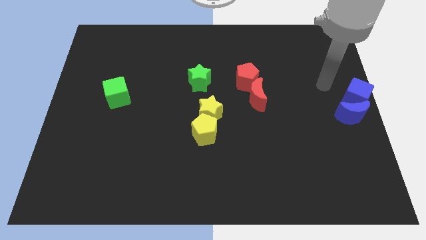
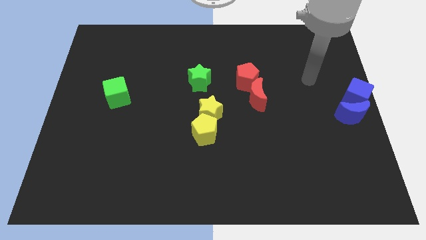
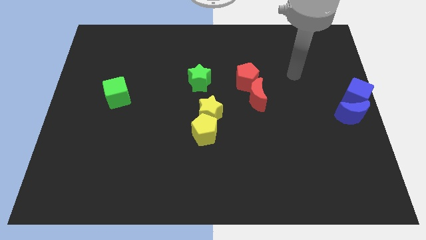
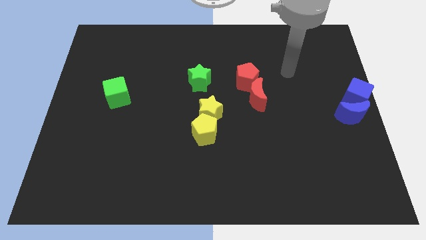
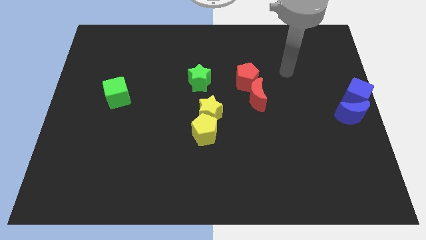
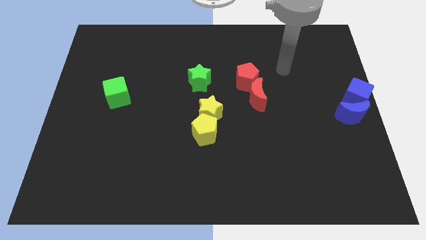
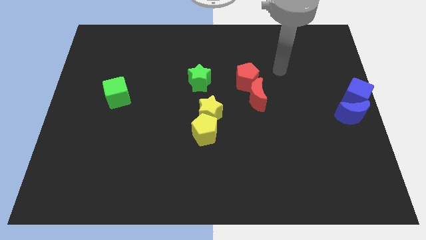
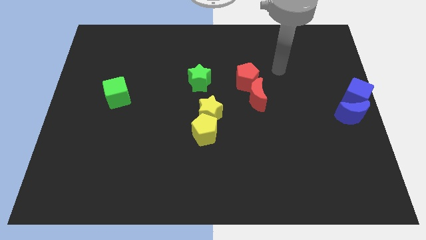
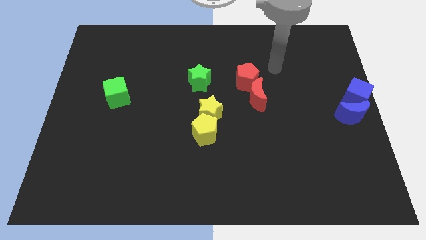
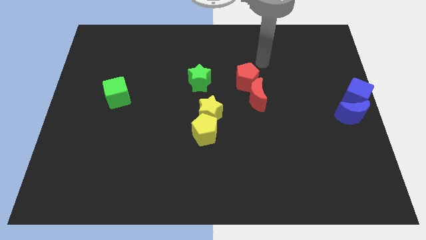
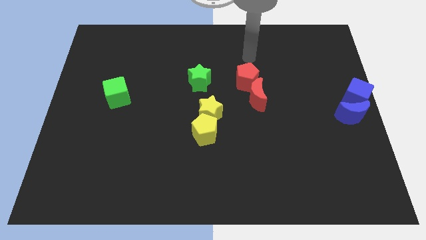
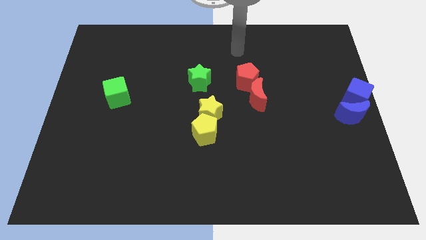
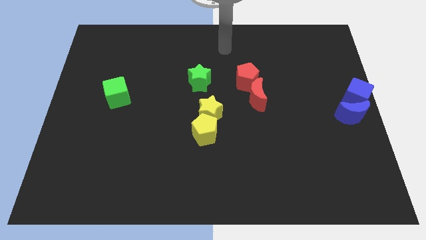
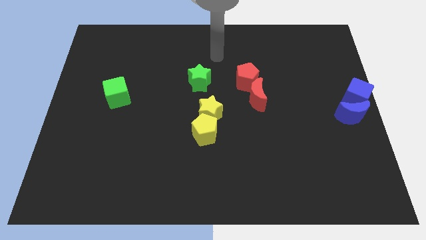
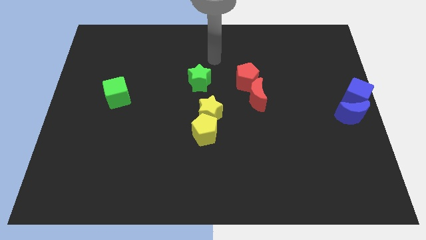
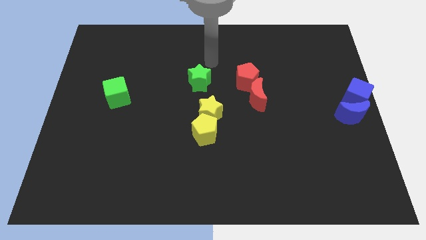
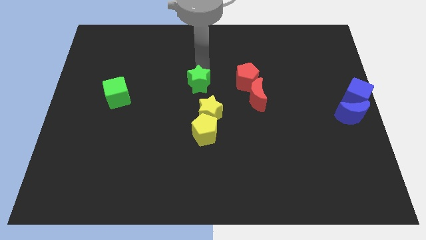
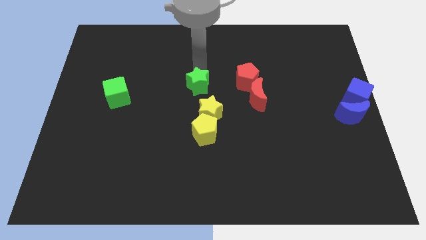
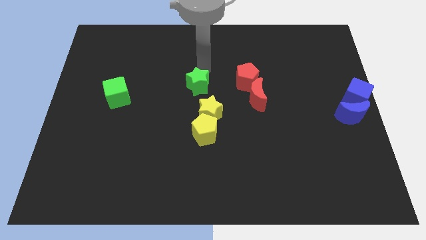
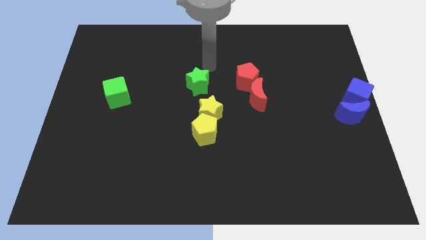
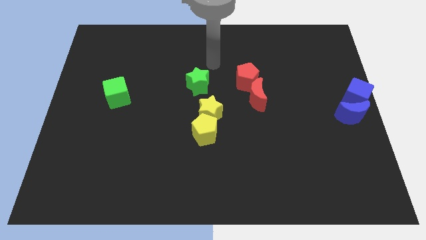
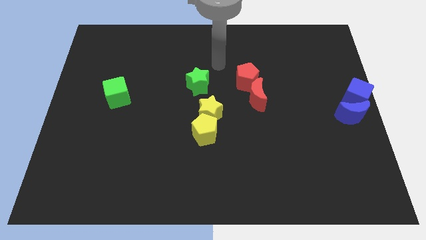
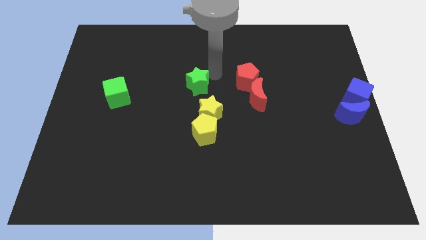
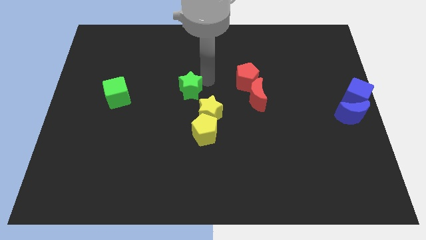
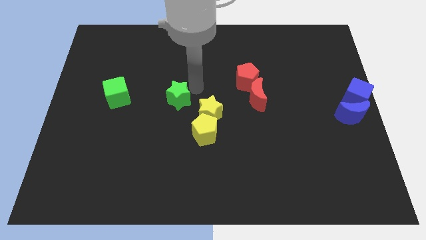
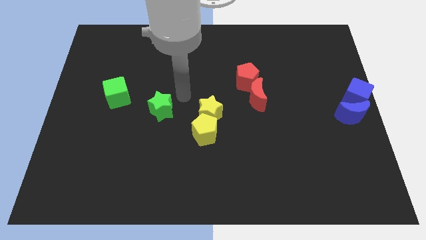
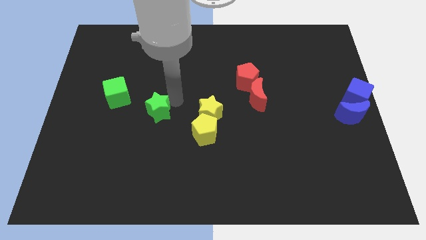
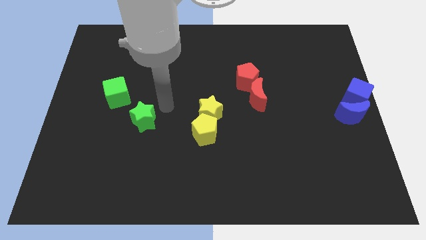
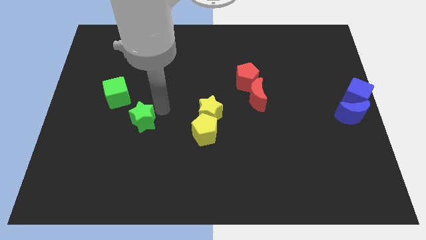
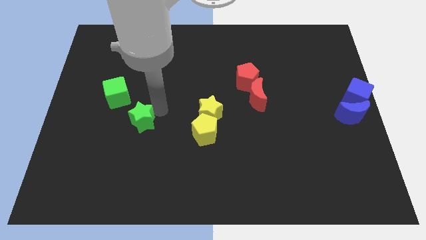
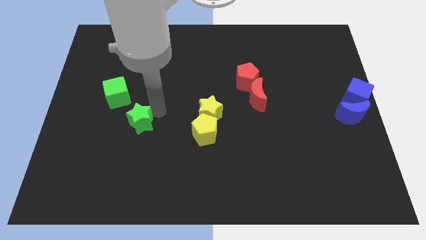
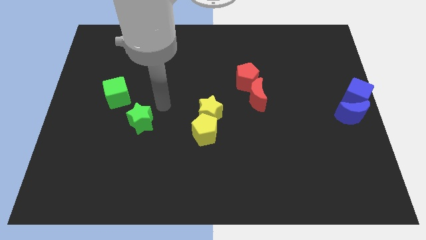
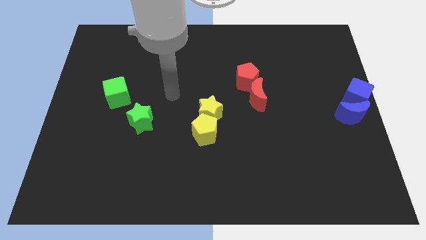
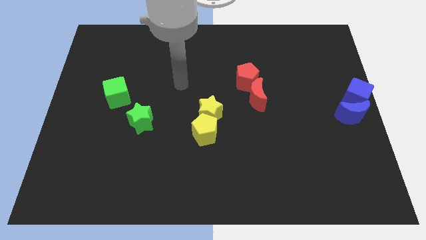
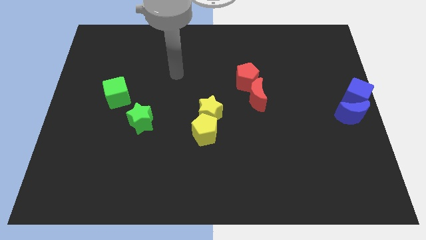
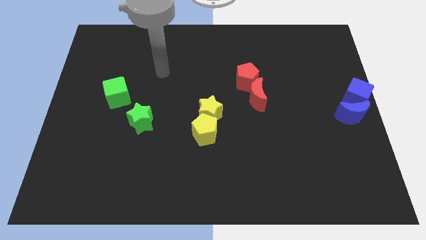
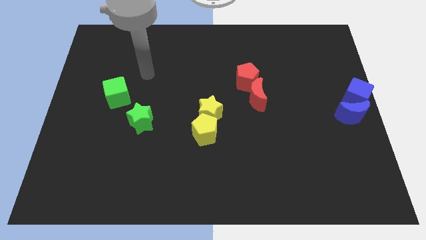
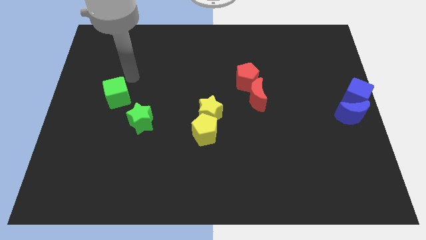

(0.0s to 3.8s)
place the green star to the left of the yellow pentagon

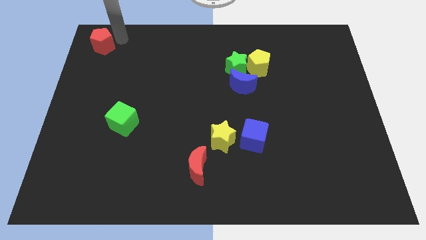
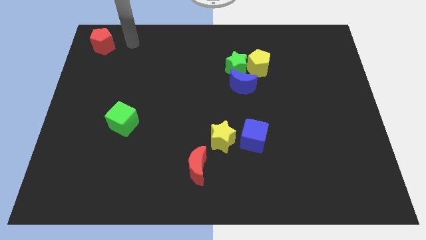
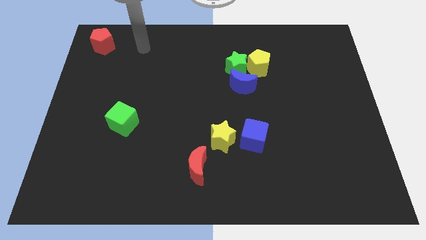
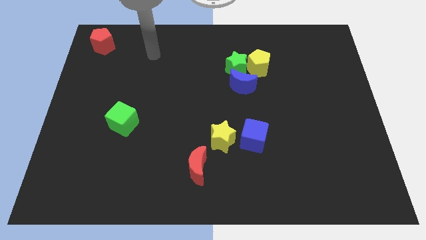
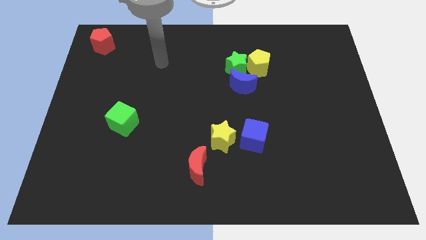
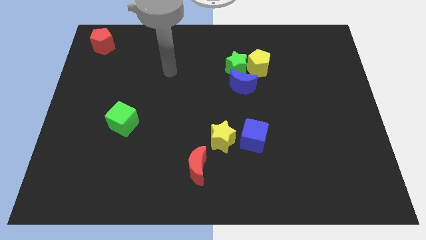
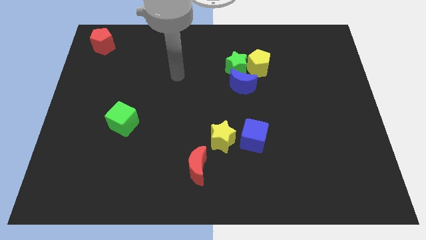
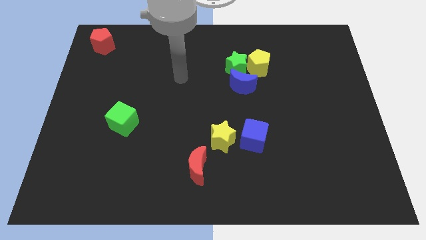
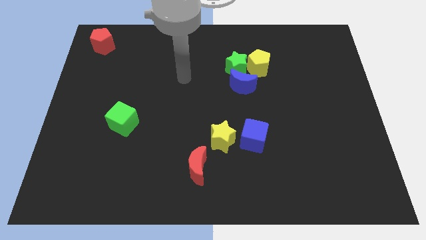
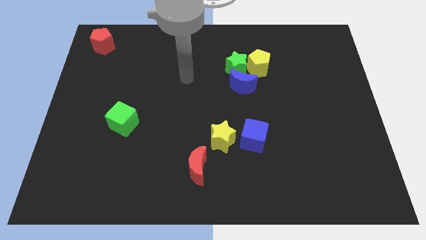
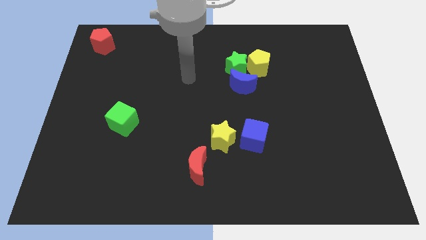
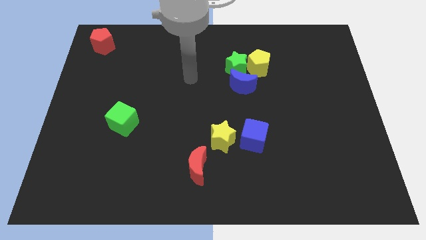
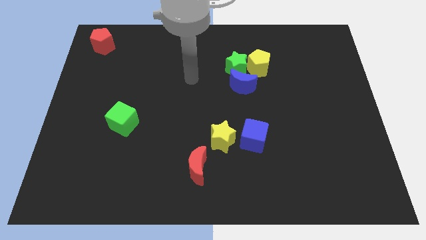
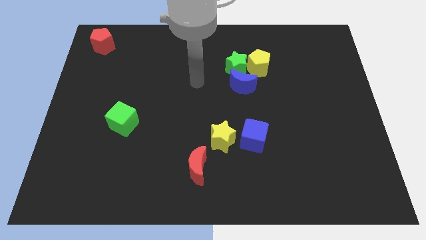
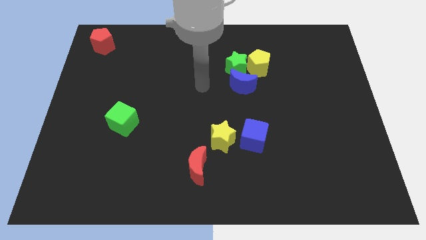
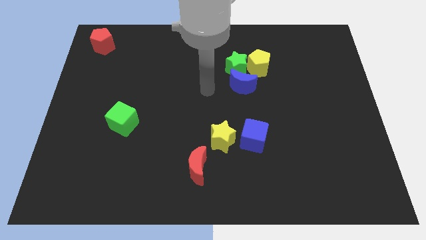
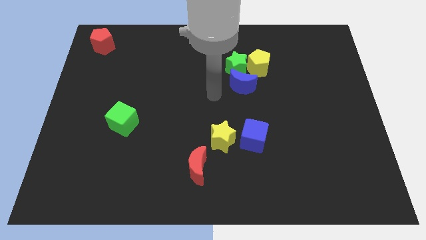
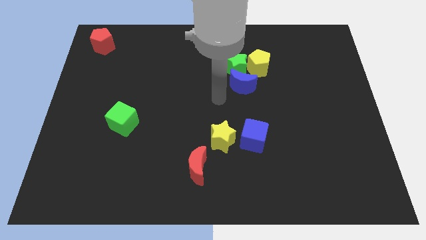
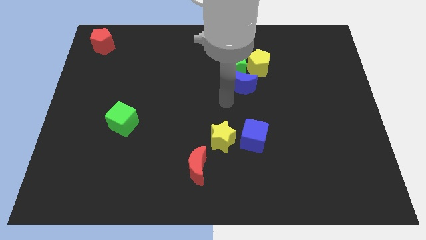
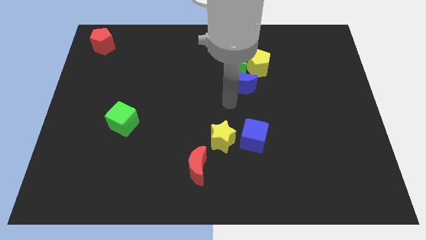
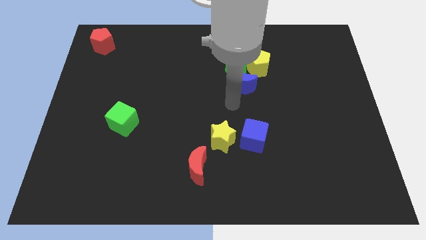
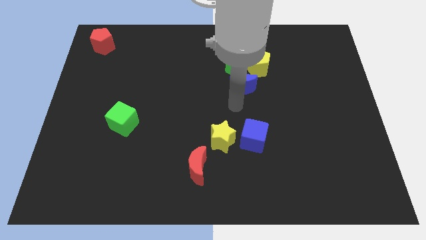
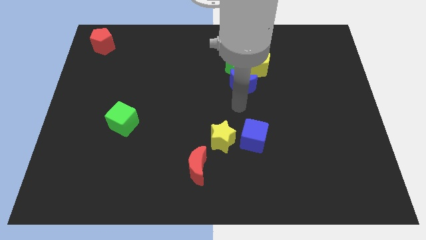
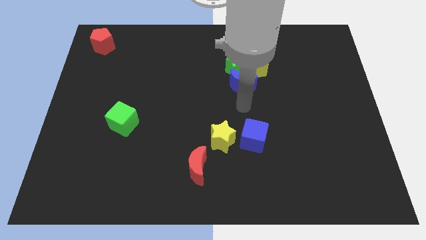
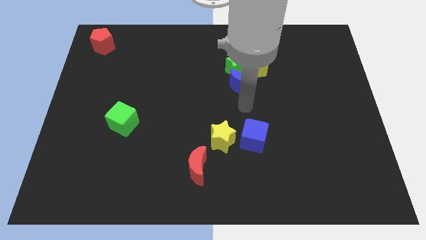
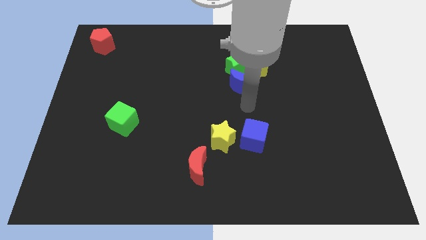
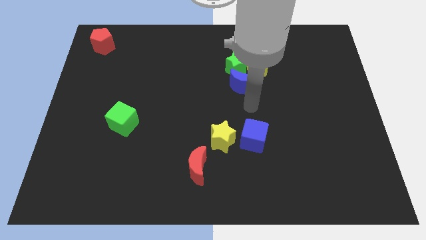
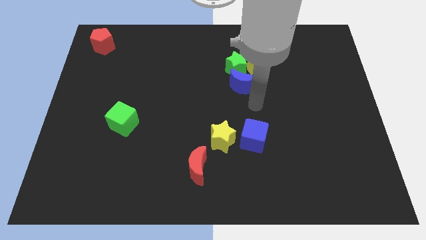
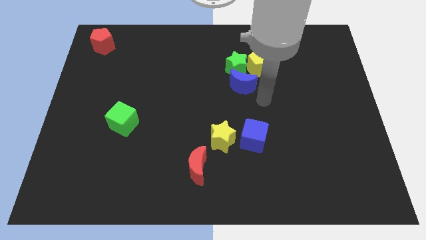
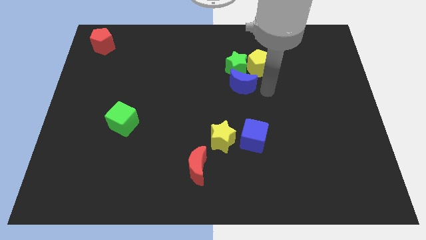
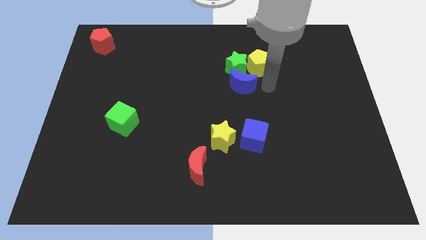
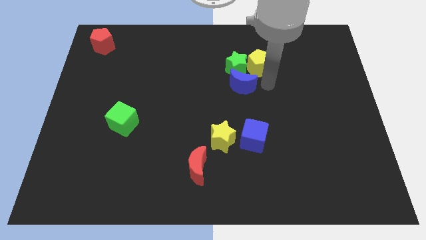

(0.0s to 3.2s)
point your arm to the right of blue moon

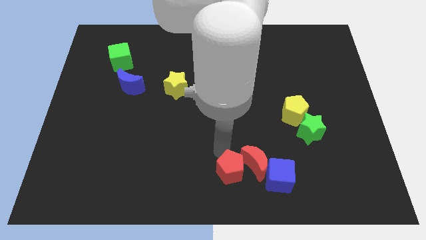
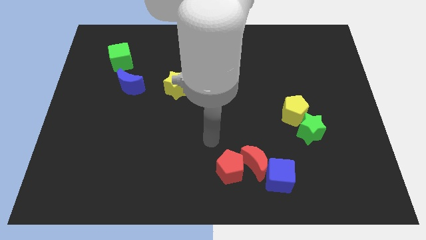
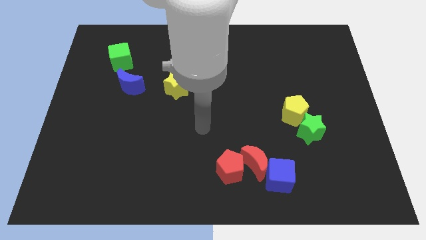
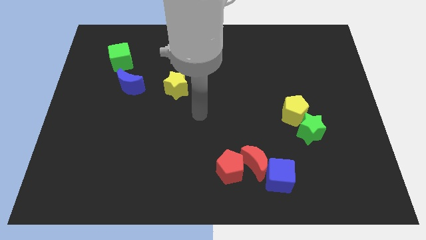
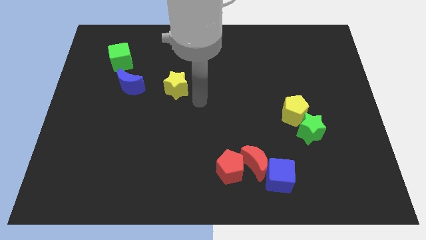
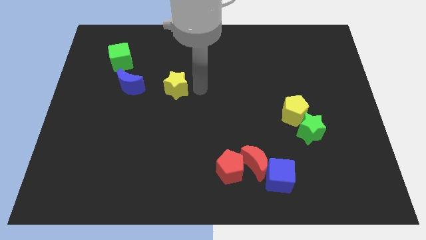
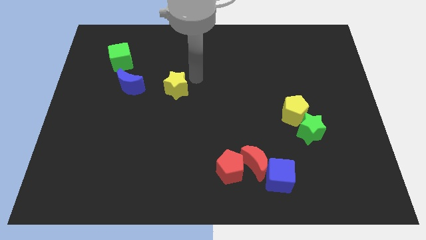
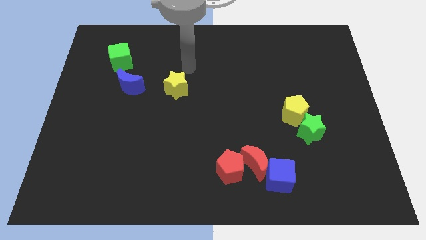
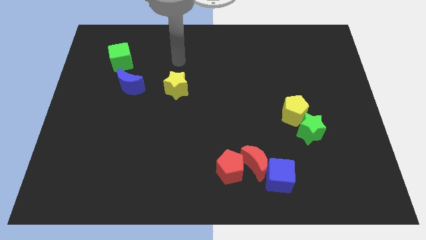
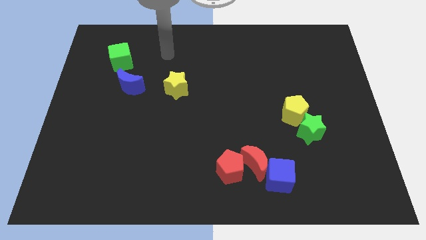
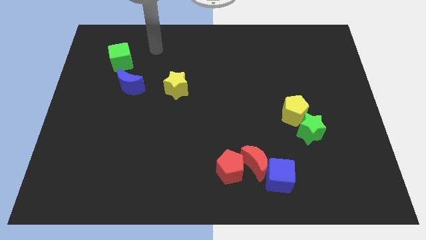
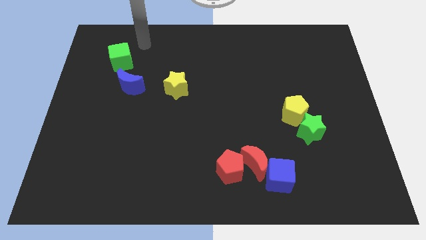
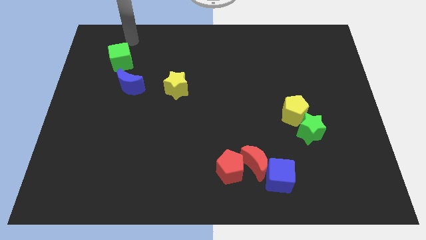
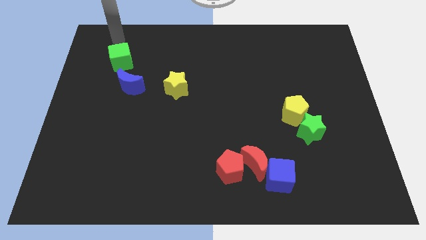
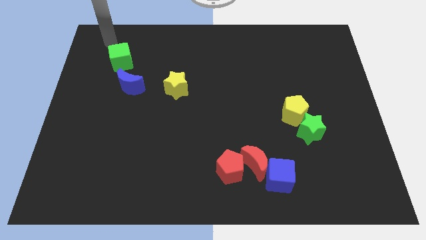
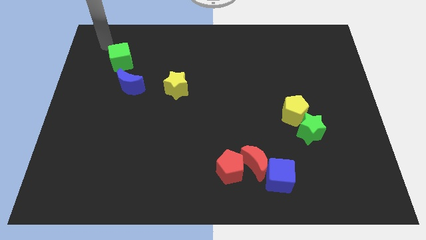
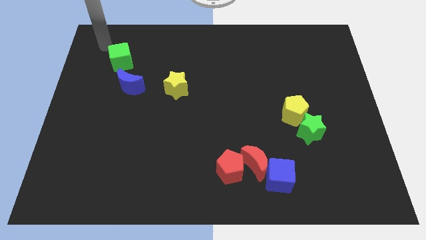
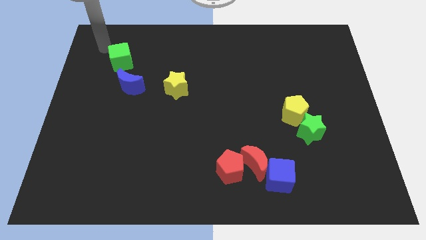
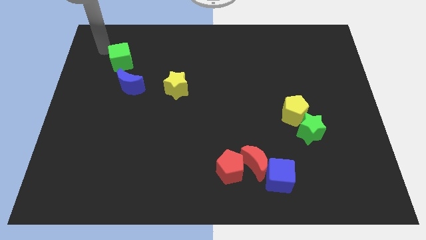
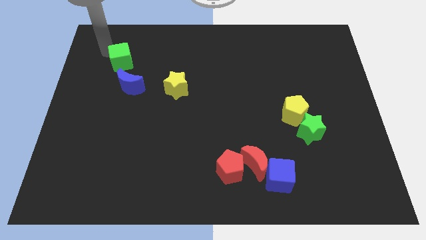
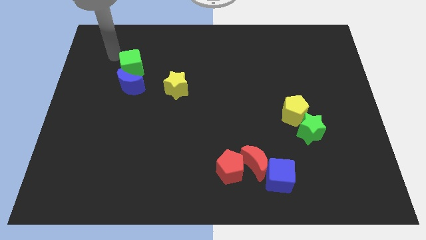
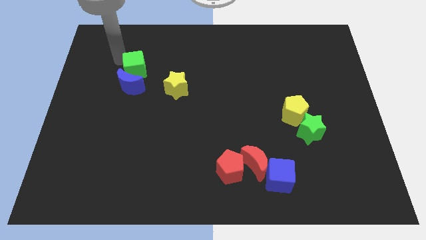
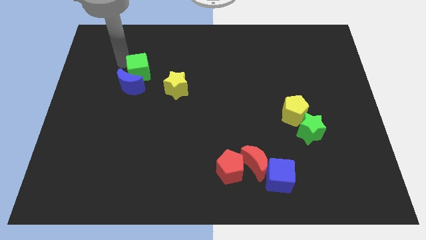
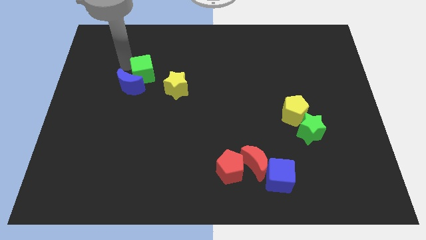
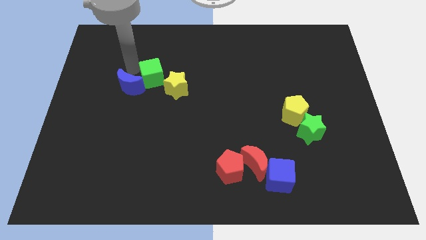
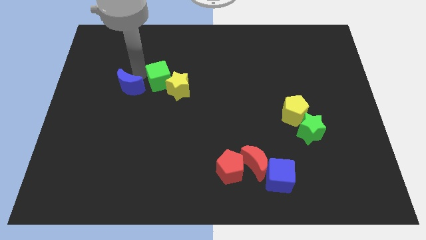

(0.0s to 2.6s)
place the green cube at the top left side of yellow star
